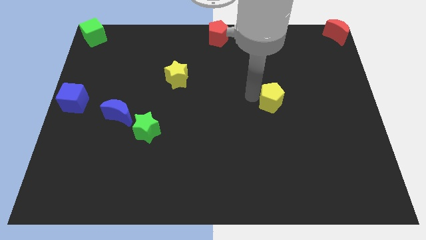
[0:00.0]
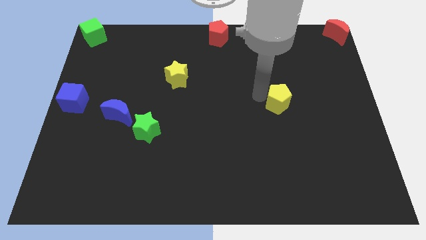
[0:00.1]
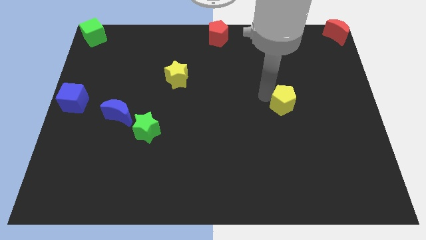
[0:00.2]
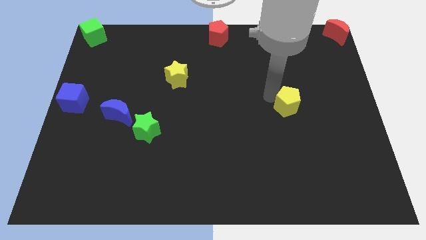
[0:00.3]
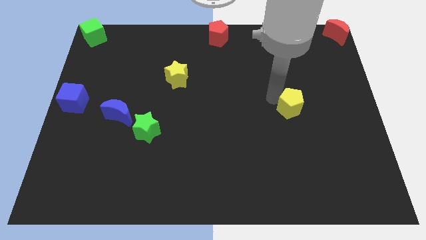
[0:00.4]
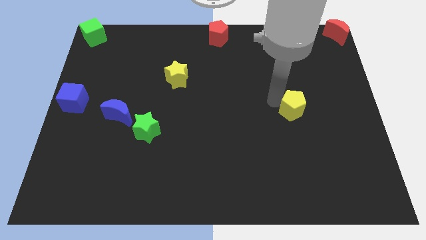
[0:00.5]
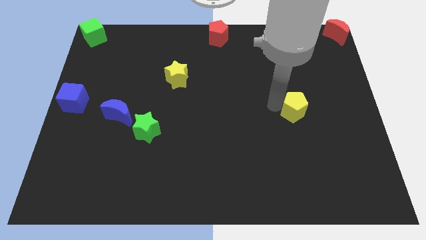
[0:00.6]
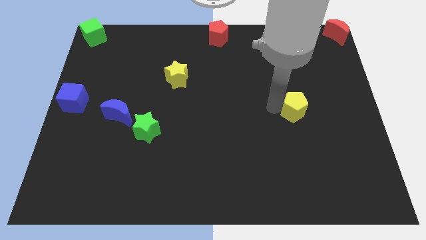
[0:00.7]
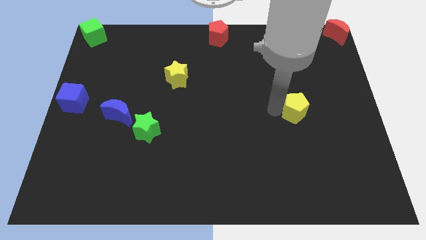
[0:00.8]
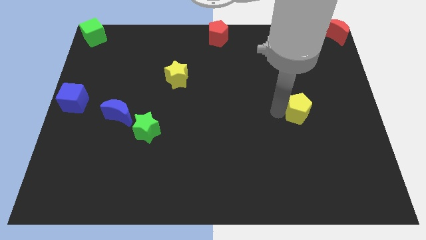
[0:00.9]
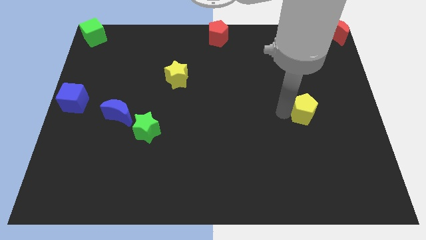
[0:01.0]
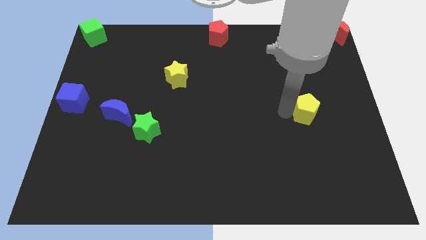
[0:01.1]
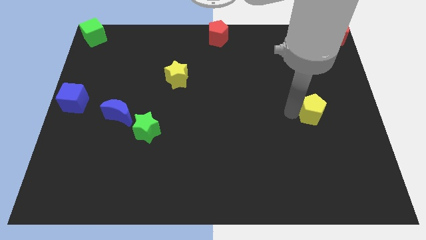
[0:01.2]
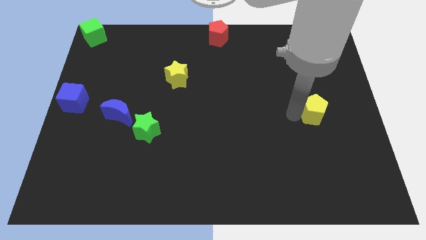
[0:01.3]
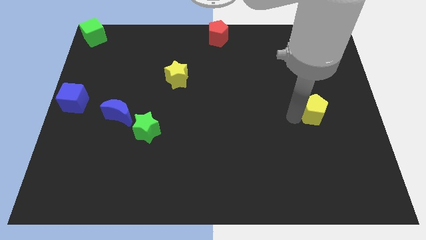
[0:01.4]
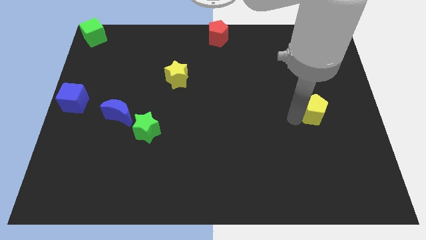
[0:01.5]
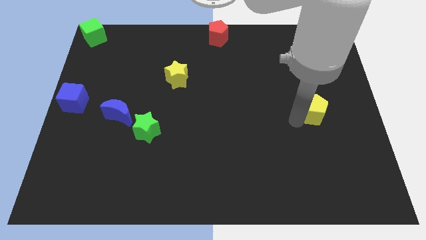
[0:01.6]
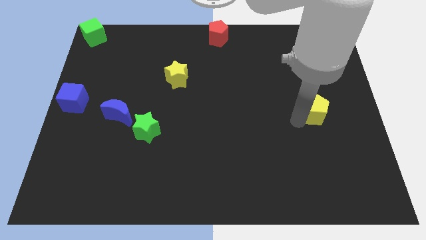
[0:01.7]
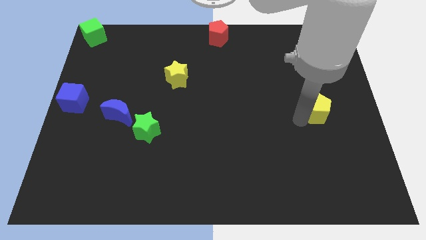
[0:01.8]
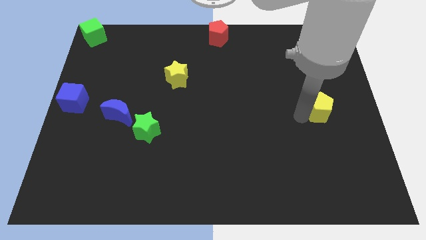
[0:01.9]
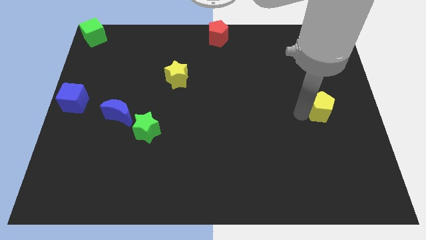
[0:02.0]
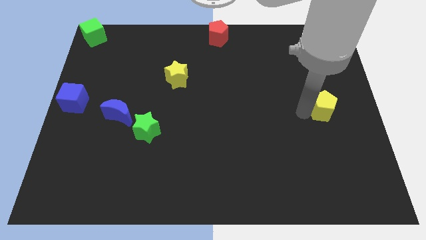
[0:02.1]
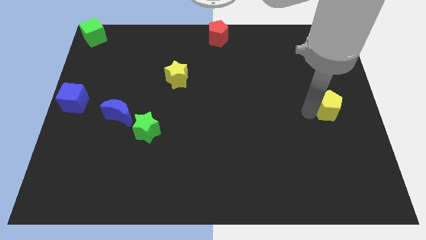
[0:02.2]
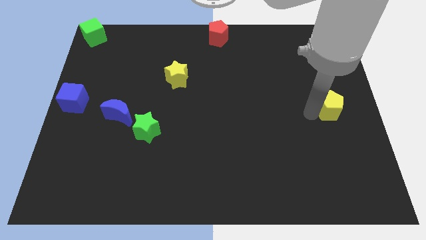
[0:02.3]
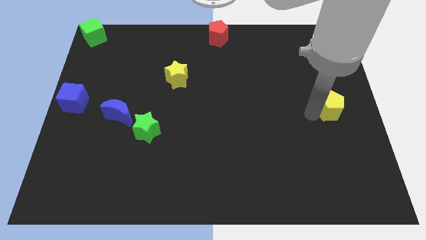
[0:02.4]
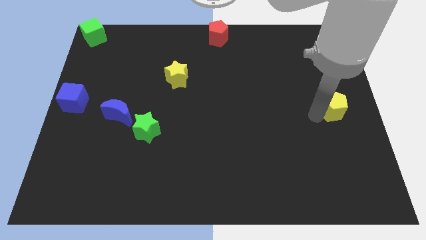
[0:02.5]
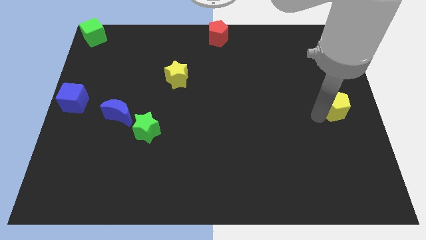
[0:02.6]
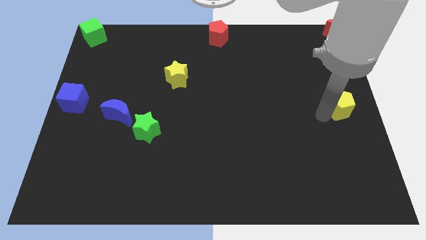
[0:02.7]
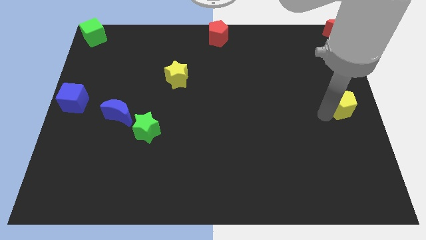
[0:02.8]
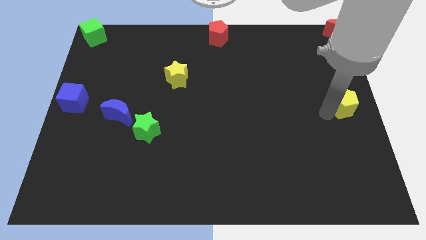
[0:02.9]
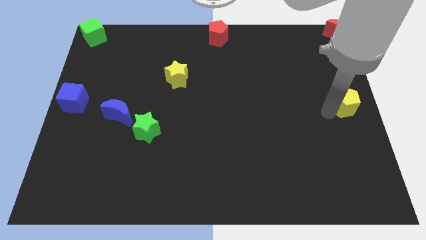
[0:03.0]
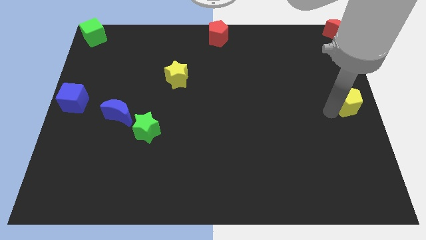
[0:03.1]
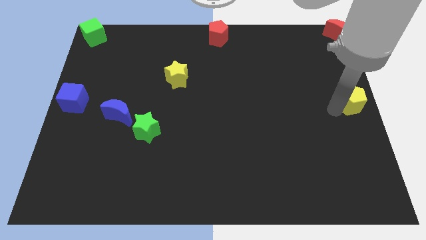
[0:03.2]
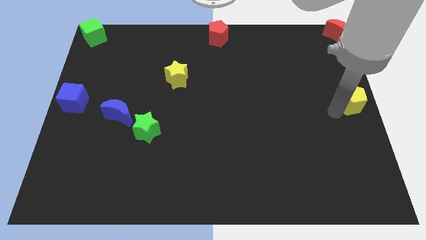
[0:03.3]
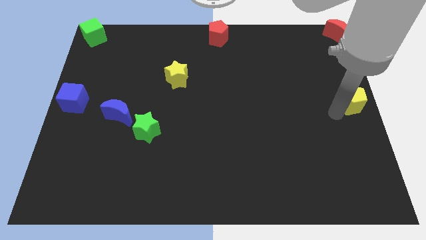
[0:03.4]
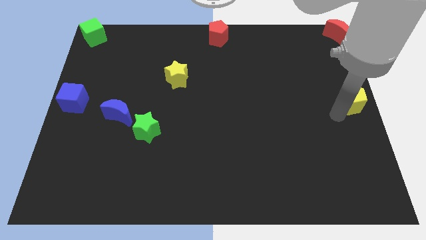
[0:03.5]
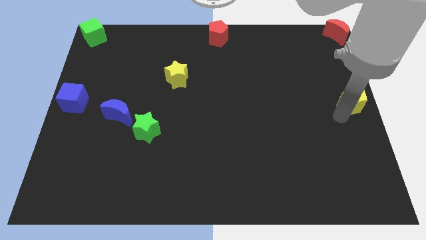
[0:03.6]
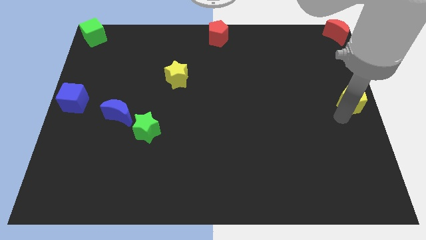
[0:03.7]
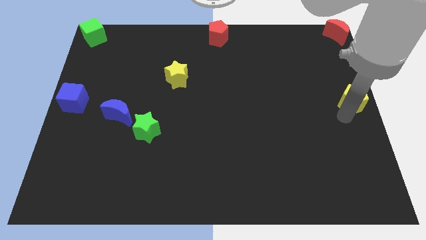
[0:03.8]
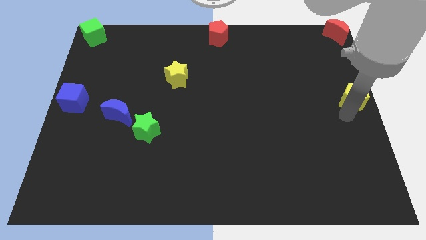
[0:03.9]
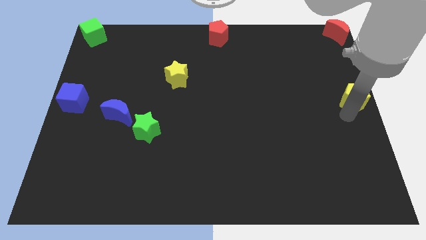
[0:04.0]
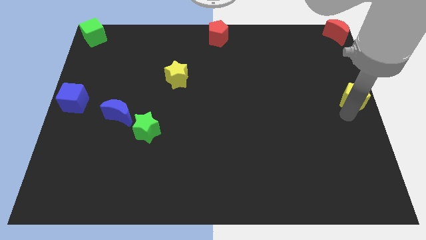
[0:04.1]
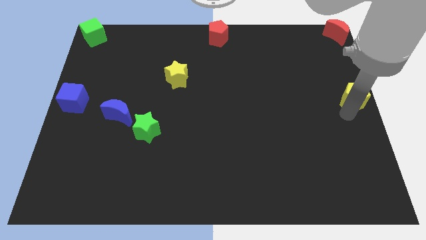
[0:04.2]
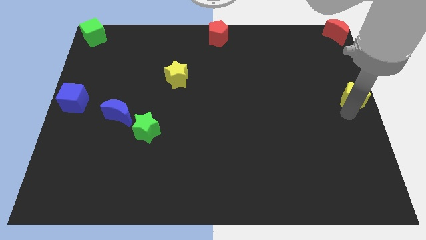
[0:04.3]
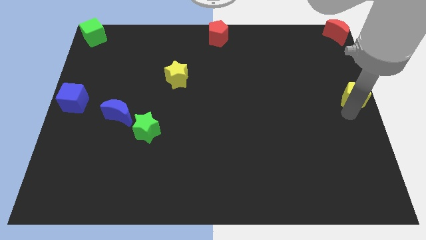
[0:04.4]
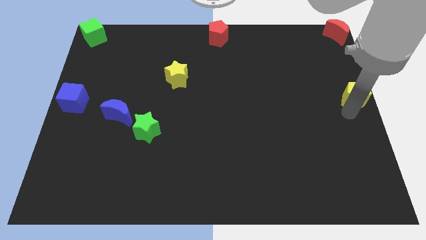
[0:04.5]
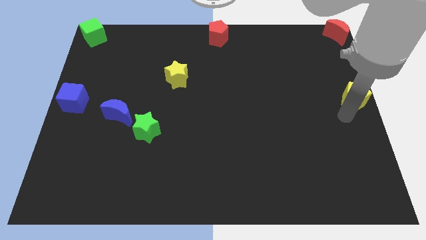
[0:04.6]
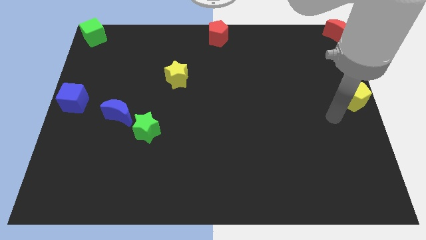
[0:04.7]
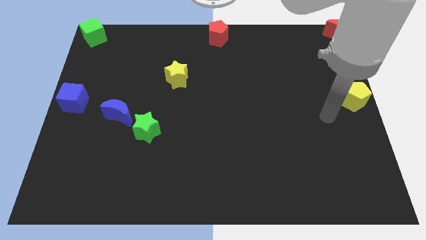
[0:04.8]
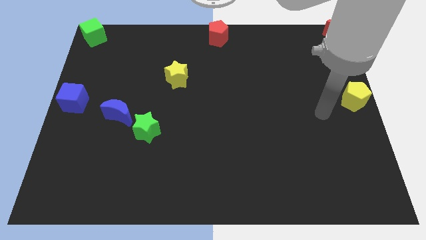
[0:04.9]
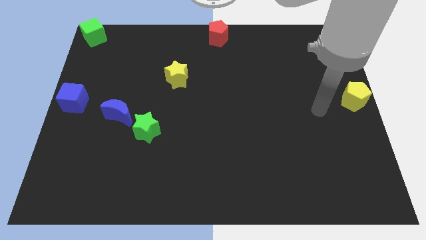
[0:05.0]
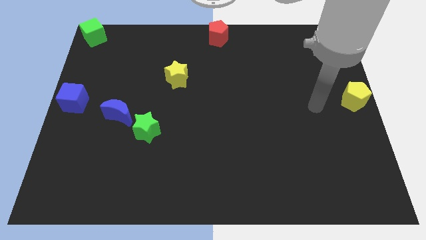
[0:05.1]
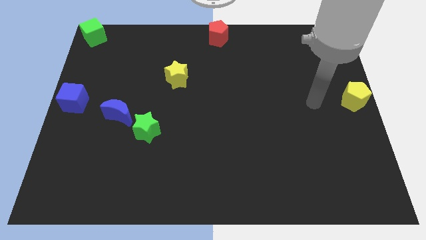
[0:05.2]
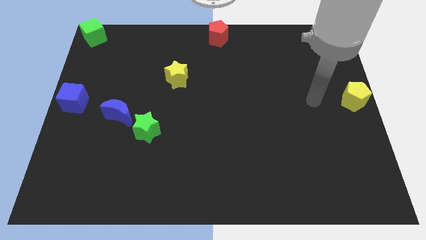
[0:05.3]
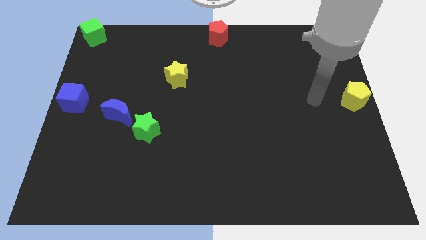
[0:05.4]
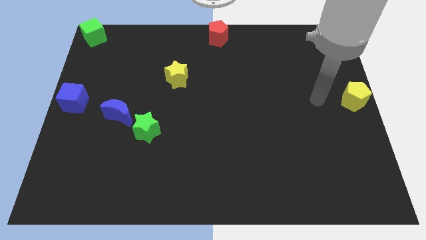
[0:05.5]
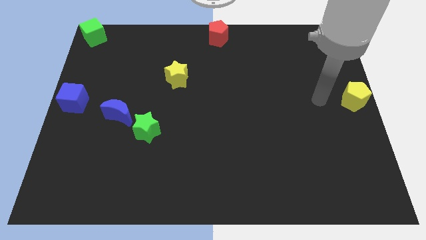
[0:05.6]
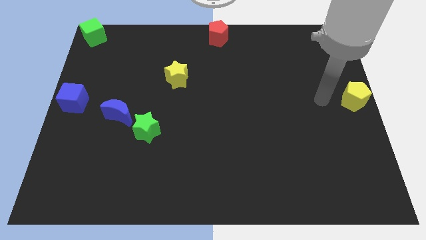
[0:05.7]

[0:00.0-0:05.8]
place the yellow pentagon towards the center left of the board

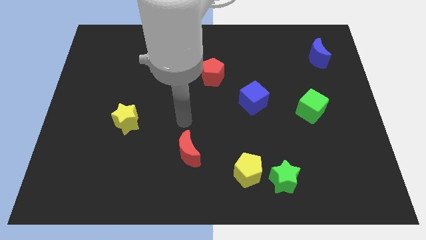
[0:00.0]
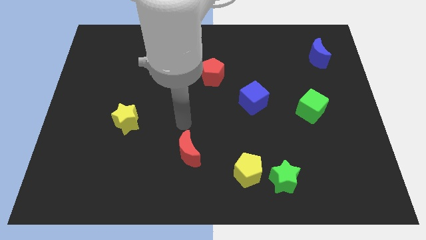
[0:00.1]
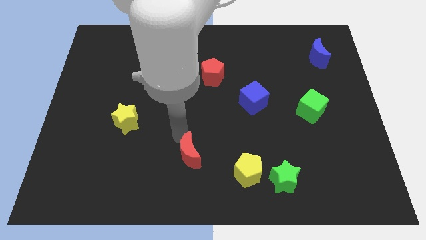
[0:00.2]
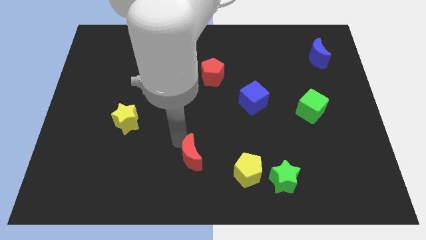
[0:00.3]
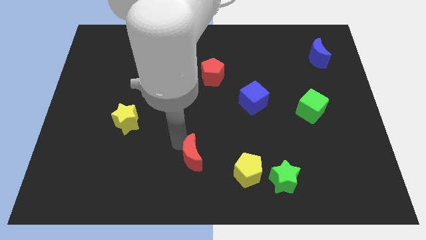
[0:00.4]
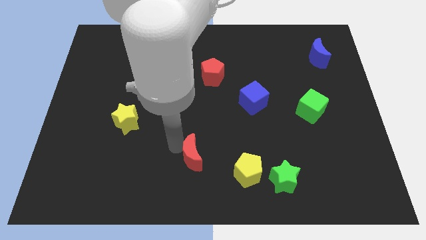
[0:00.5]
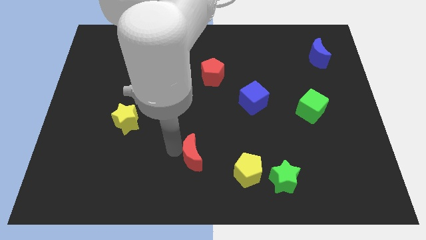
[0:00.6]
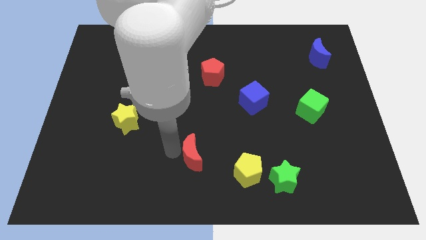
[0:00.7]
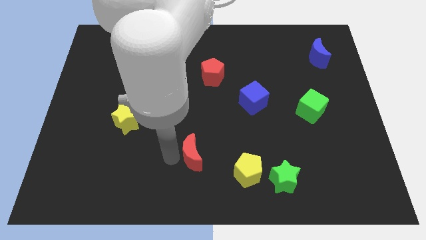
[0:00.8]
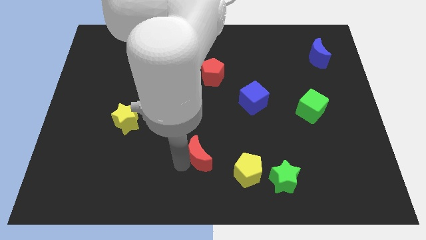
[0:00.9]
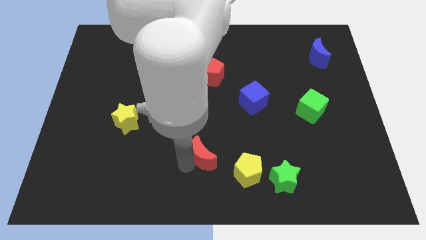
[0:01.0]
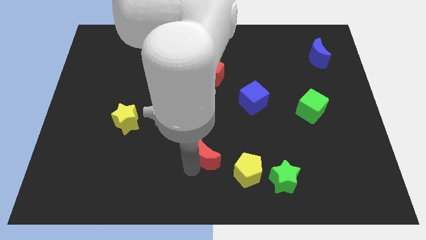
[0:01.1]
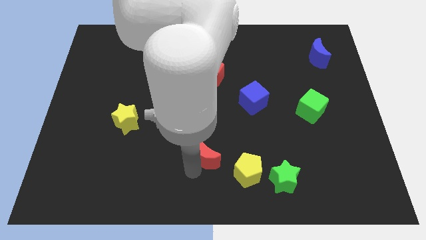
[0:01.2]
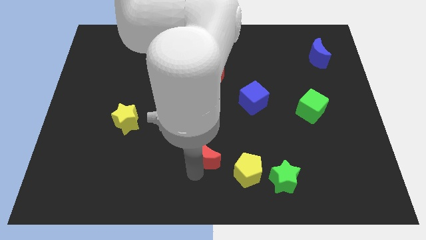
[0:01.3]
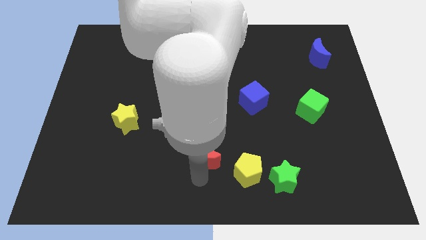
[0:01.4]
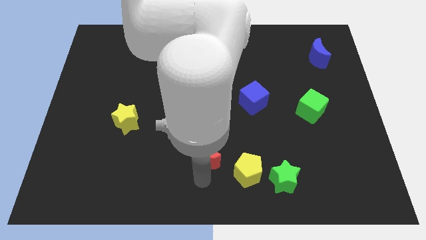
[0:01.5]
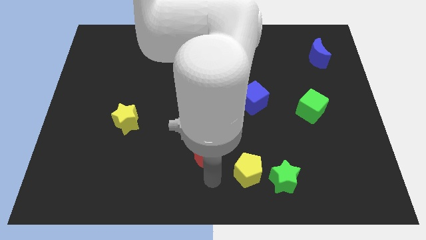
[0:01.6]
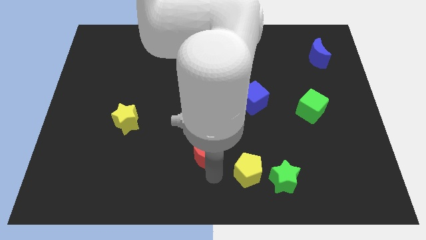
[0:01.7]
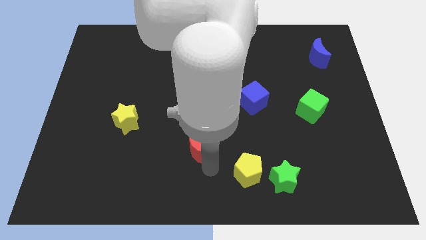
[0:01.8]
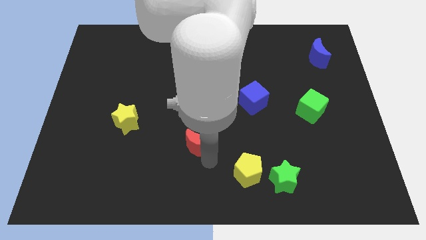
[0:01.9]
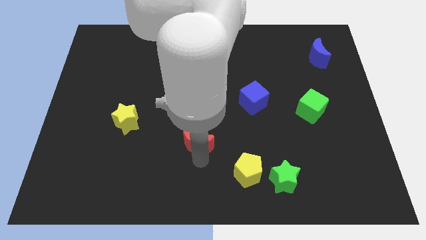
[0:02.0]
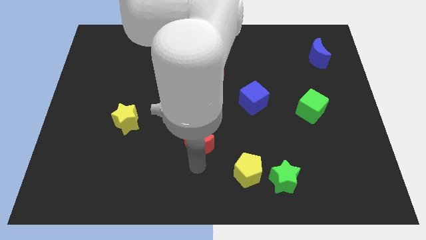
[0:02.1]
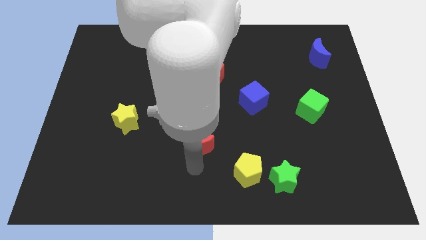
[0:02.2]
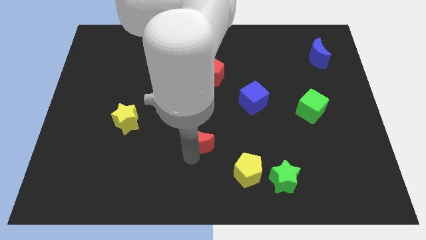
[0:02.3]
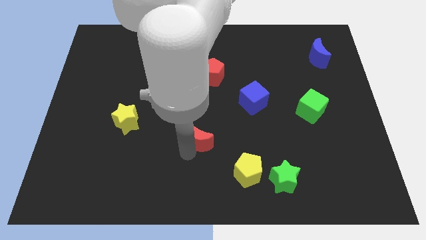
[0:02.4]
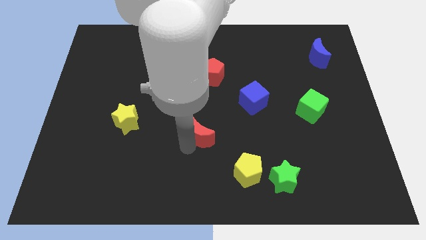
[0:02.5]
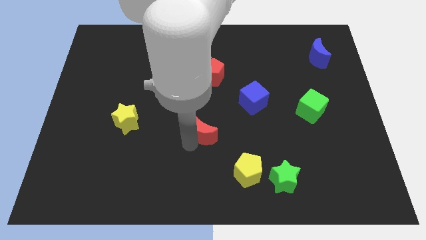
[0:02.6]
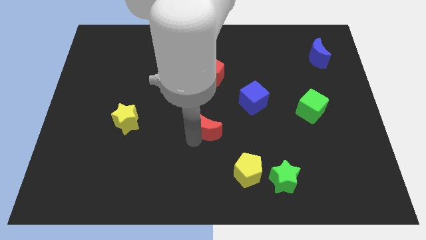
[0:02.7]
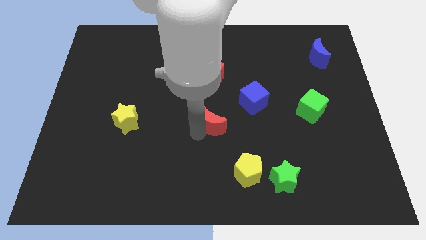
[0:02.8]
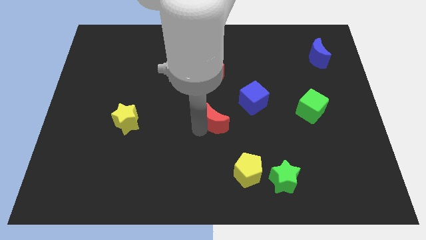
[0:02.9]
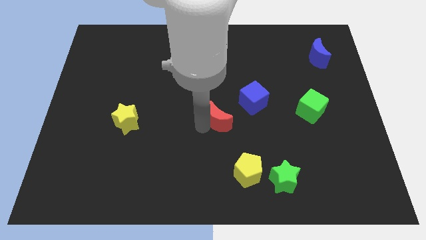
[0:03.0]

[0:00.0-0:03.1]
push the red crescent to the top left of the yellow pentagon

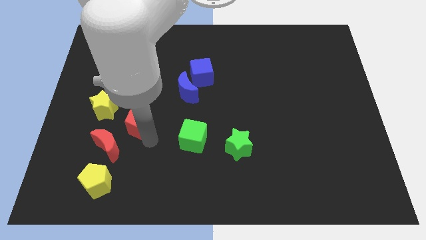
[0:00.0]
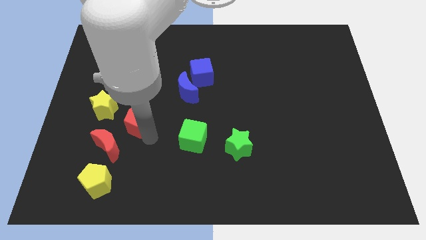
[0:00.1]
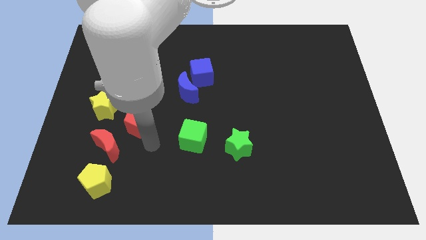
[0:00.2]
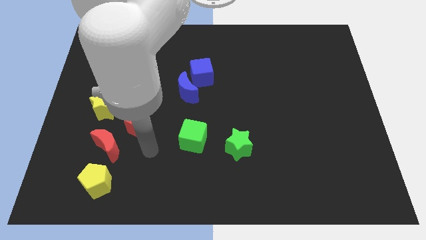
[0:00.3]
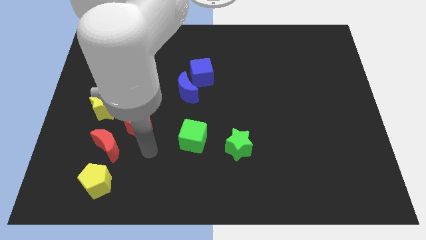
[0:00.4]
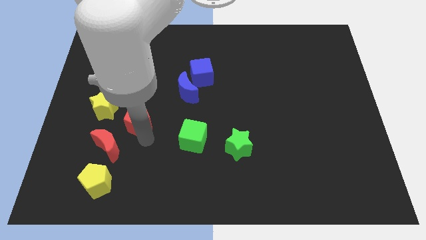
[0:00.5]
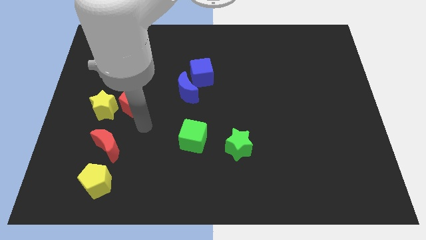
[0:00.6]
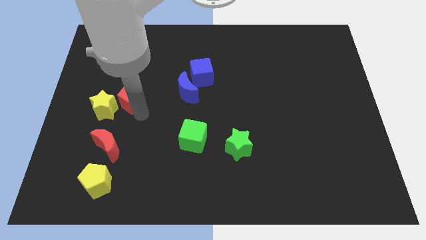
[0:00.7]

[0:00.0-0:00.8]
push red pentagon beside yellow star
